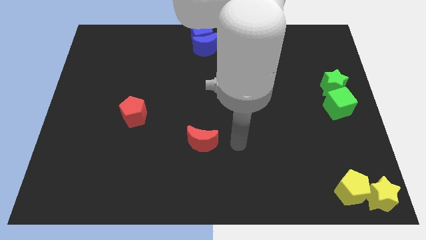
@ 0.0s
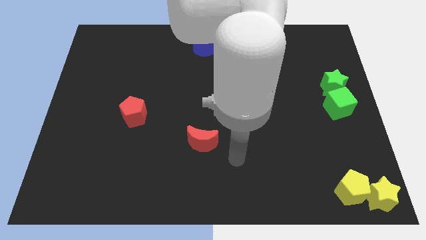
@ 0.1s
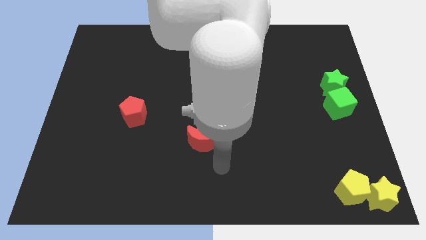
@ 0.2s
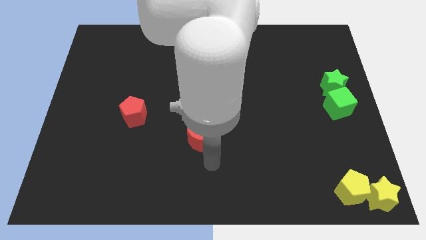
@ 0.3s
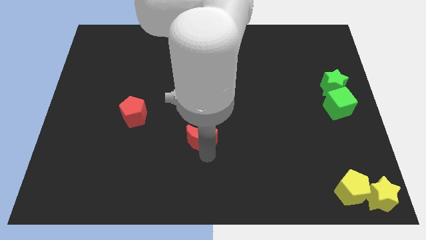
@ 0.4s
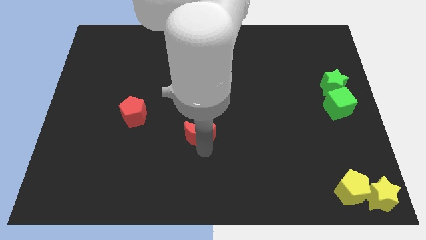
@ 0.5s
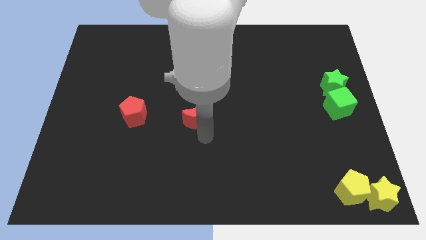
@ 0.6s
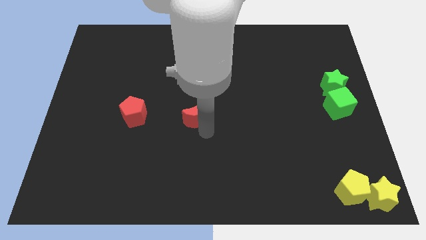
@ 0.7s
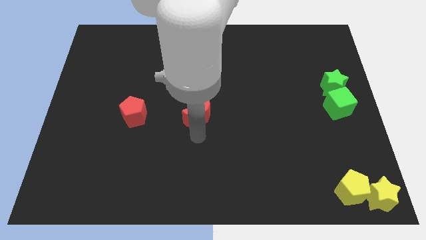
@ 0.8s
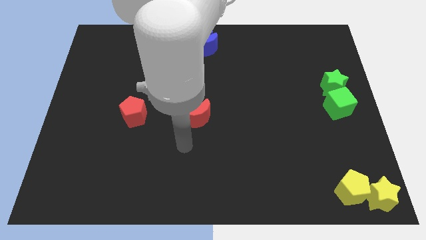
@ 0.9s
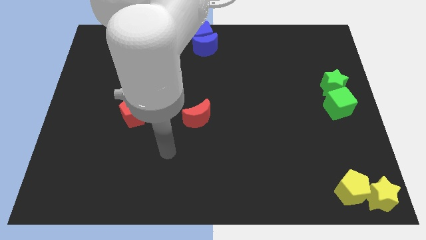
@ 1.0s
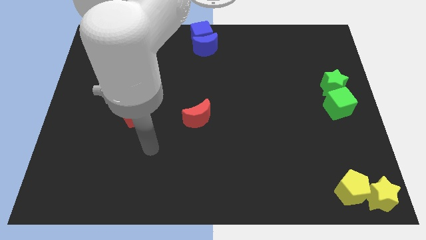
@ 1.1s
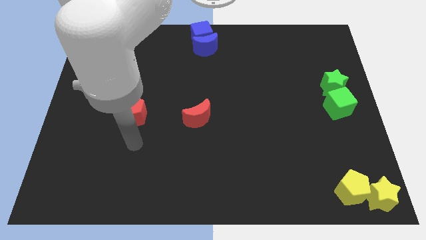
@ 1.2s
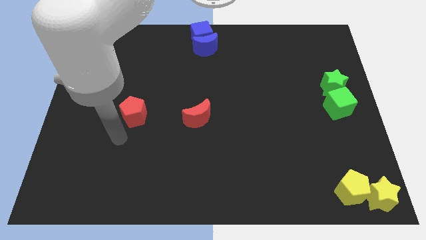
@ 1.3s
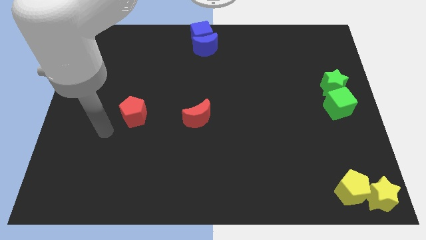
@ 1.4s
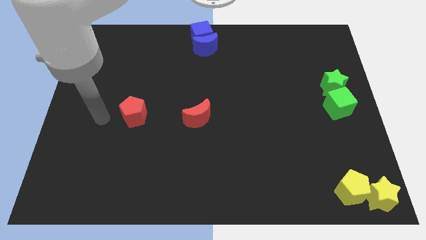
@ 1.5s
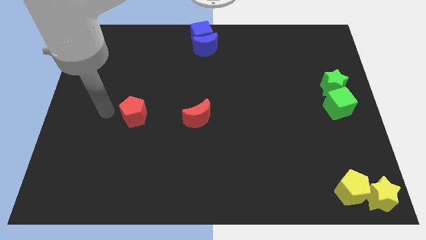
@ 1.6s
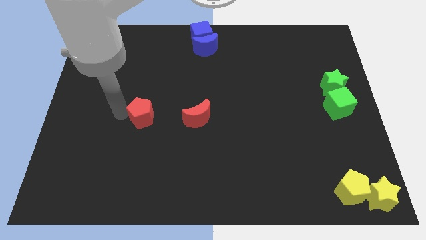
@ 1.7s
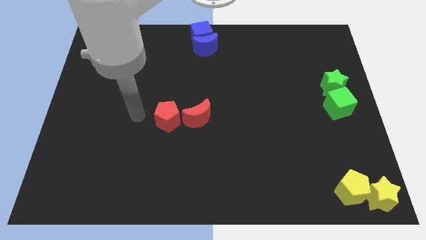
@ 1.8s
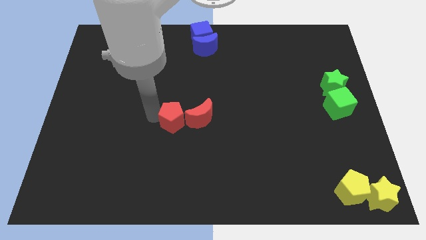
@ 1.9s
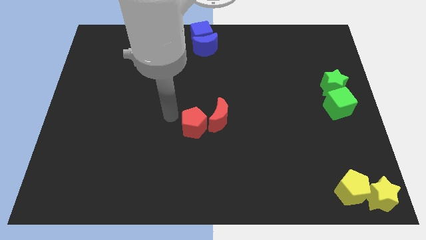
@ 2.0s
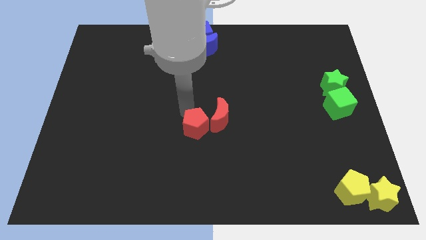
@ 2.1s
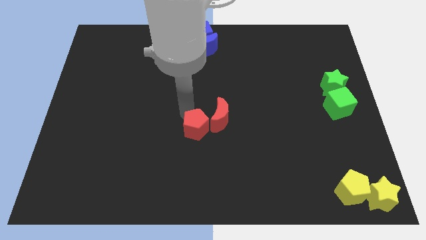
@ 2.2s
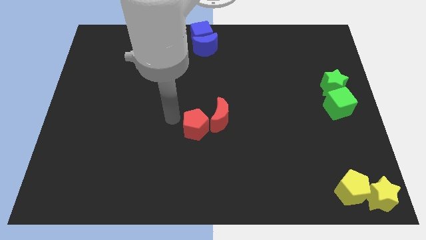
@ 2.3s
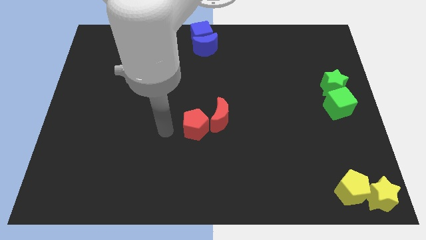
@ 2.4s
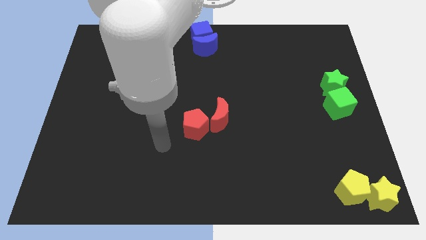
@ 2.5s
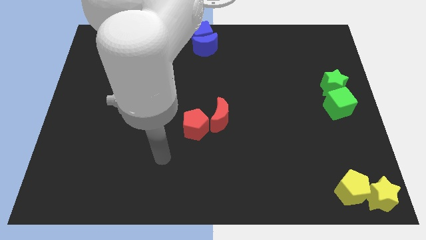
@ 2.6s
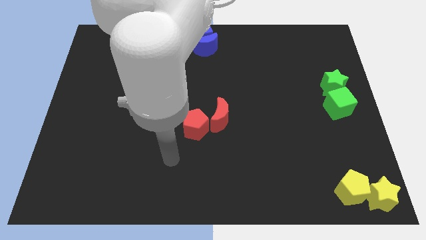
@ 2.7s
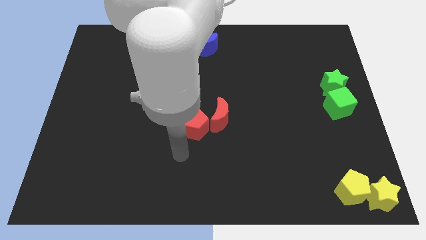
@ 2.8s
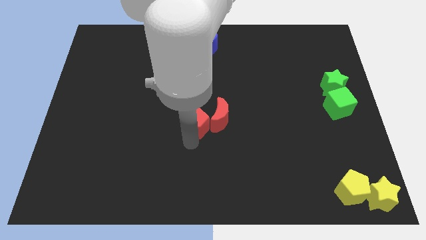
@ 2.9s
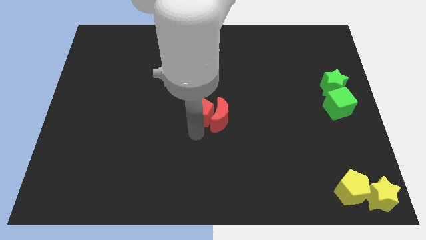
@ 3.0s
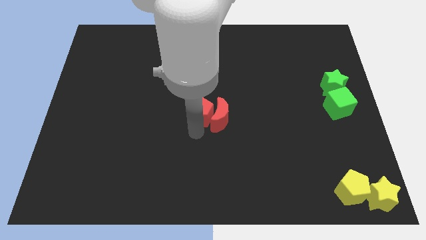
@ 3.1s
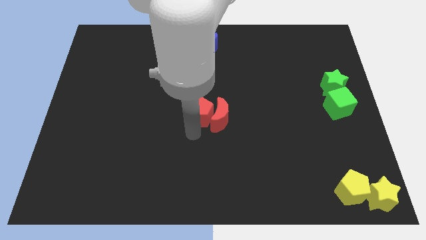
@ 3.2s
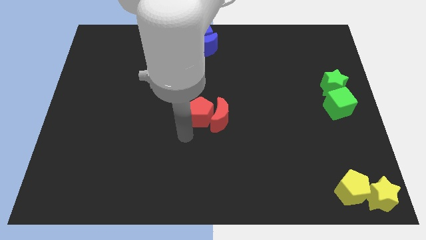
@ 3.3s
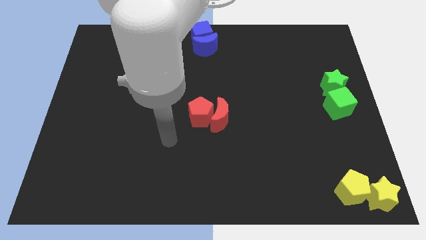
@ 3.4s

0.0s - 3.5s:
place the red blocks to the center of the board

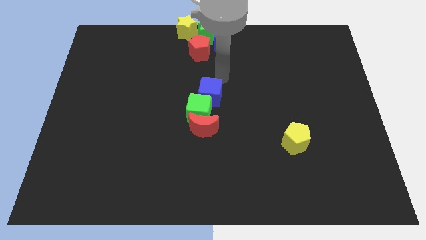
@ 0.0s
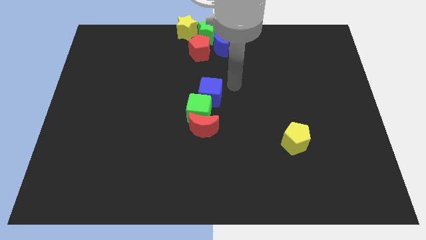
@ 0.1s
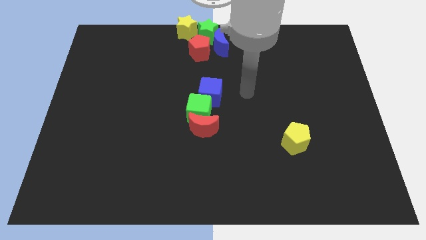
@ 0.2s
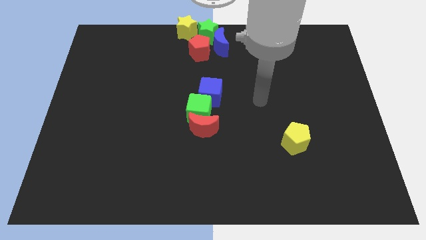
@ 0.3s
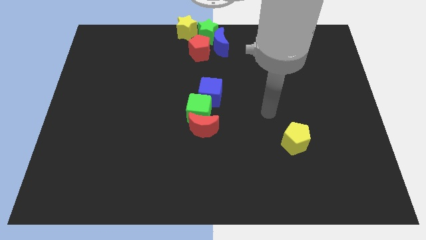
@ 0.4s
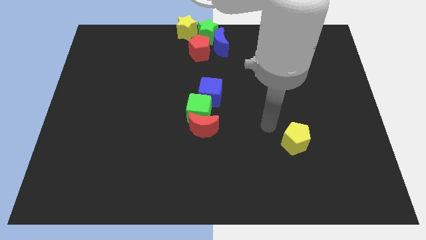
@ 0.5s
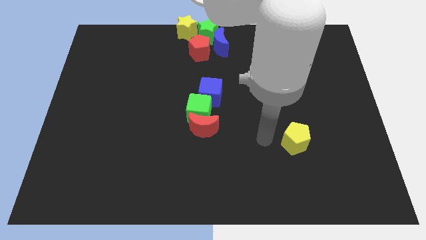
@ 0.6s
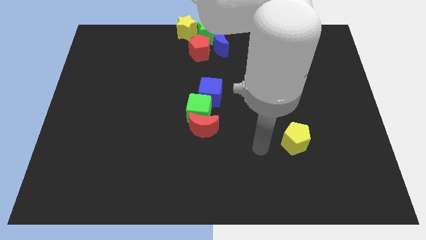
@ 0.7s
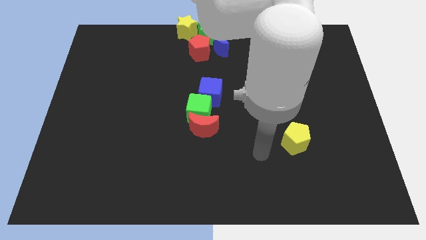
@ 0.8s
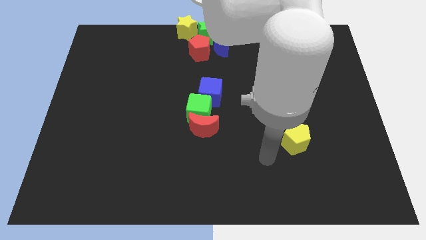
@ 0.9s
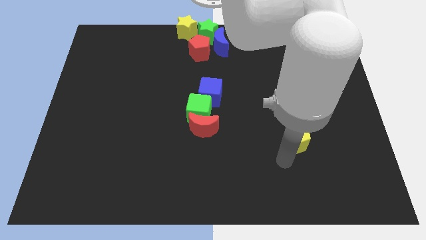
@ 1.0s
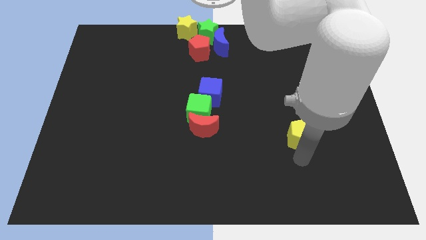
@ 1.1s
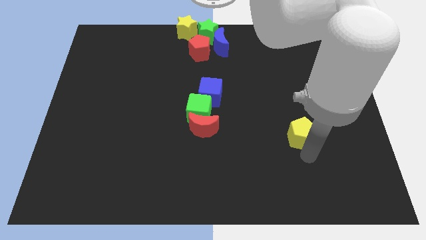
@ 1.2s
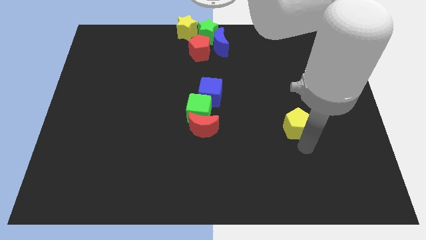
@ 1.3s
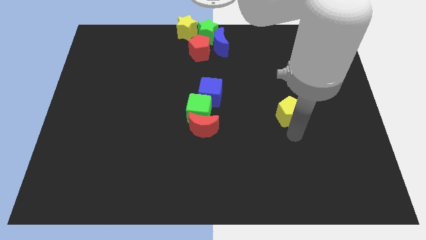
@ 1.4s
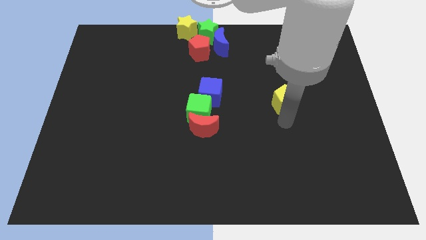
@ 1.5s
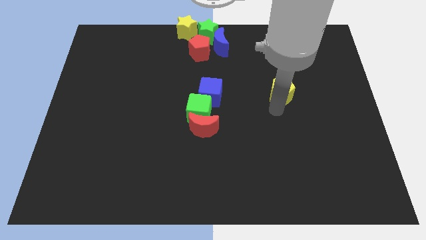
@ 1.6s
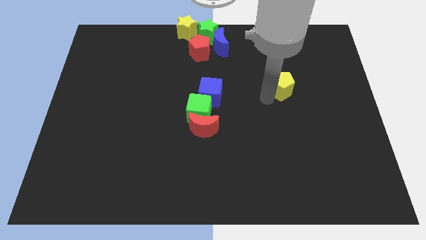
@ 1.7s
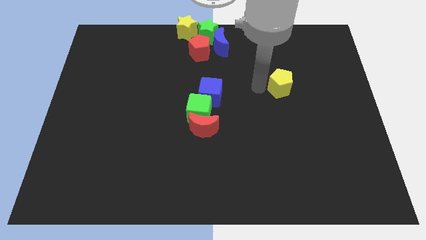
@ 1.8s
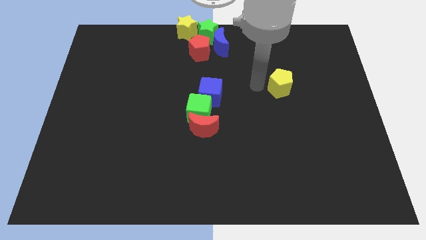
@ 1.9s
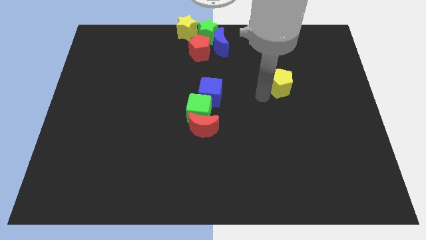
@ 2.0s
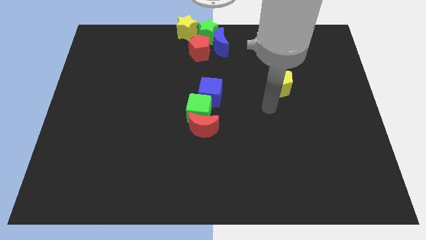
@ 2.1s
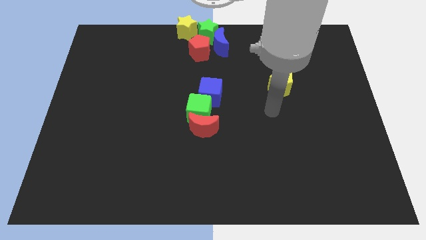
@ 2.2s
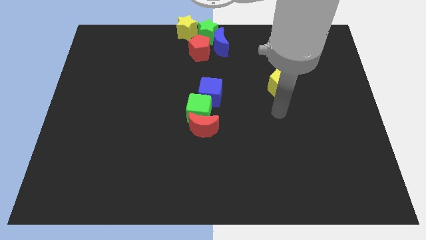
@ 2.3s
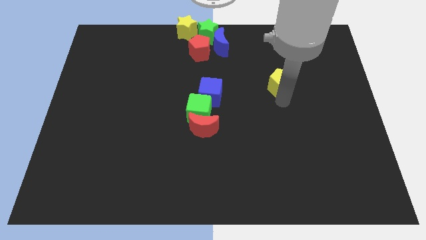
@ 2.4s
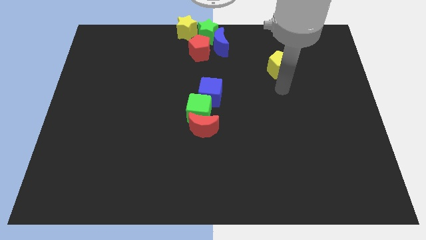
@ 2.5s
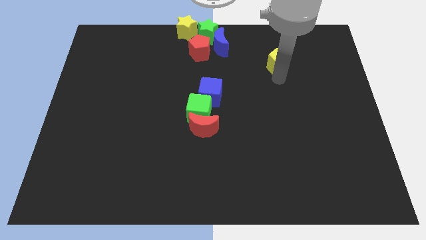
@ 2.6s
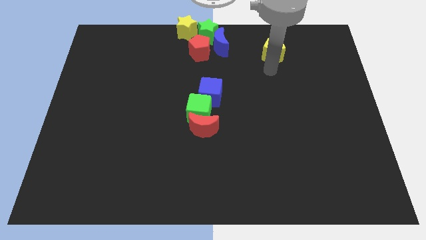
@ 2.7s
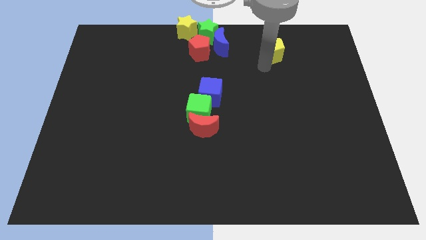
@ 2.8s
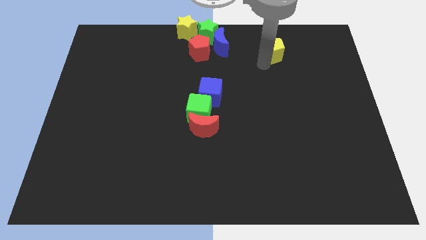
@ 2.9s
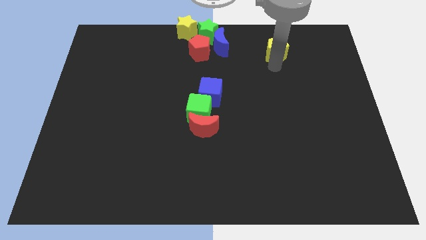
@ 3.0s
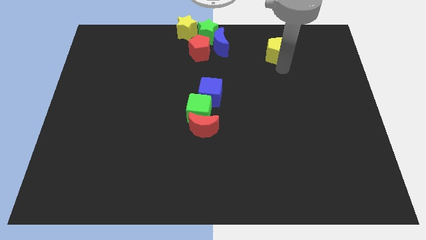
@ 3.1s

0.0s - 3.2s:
place the yellow pentagon diagonally top right to the blue cube

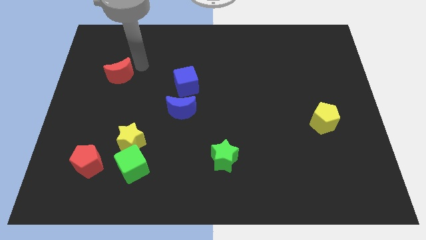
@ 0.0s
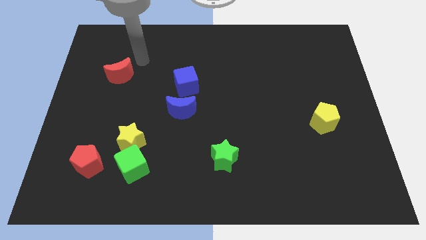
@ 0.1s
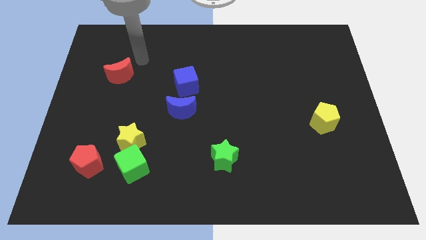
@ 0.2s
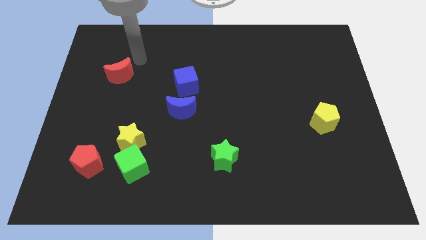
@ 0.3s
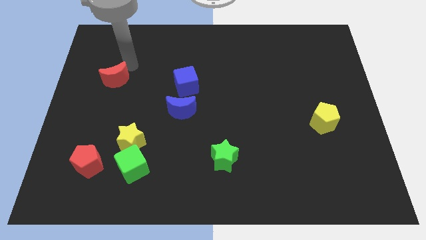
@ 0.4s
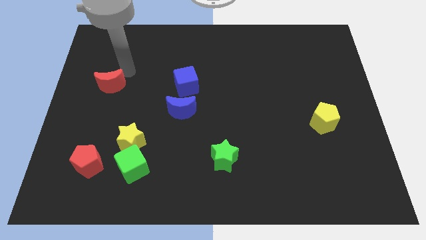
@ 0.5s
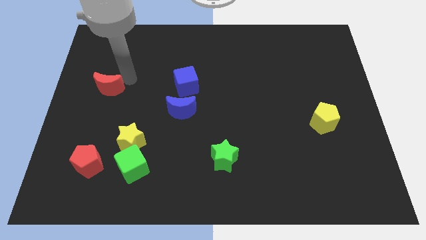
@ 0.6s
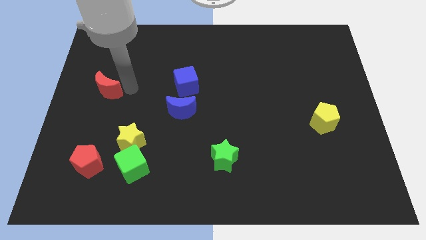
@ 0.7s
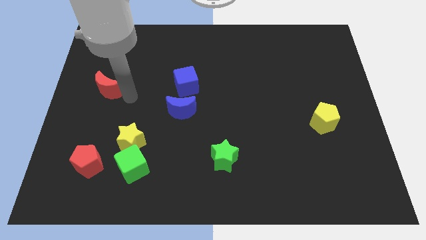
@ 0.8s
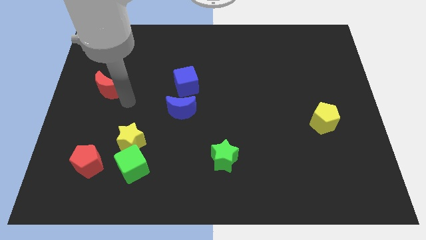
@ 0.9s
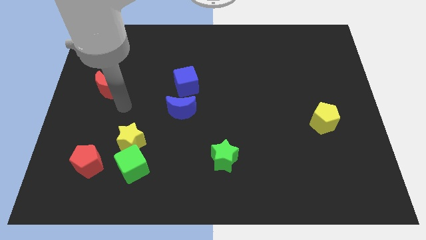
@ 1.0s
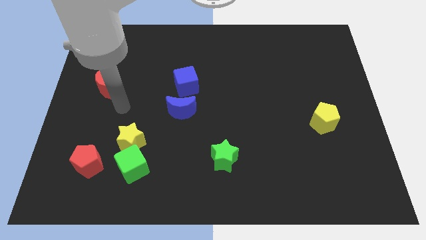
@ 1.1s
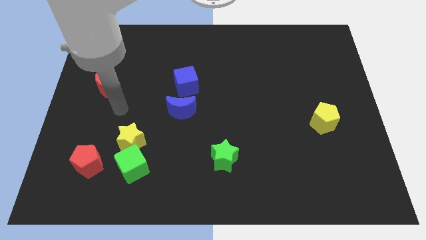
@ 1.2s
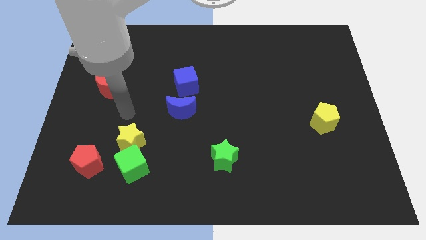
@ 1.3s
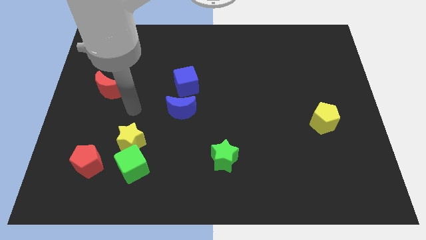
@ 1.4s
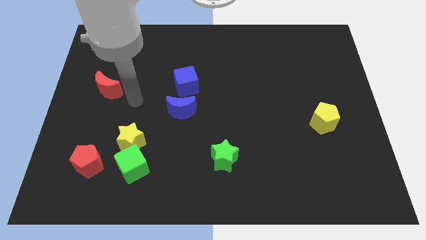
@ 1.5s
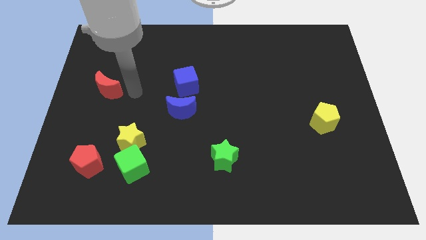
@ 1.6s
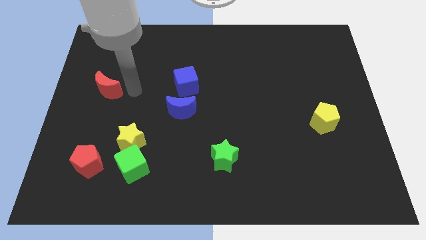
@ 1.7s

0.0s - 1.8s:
slide the red moon vertically above the red pentagon

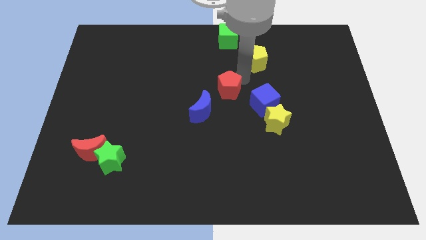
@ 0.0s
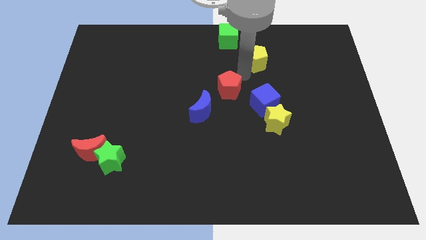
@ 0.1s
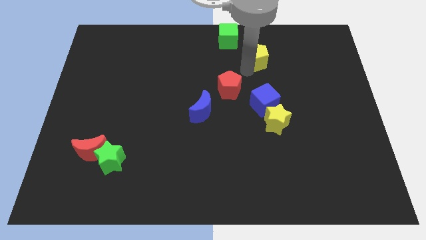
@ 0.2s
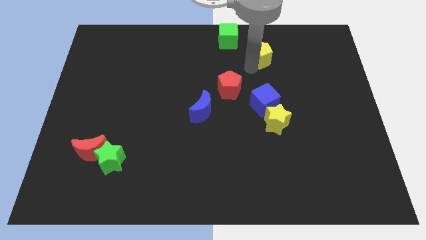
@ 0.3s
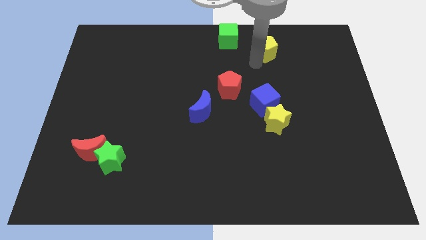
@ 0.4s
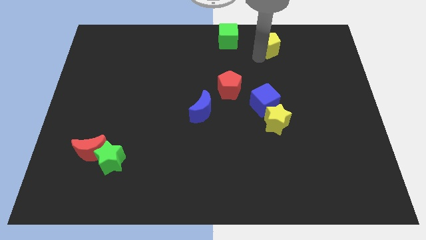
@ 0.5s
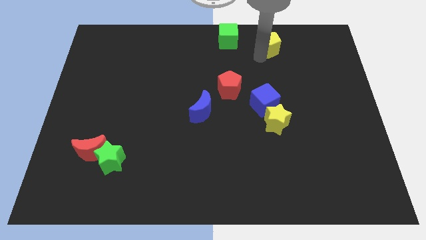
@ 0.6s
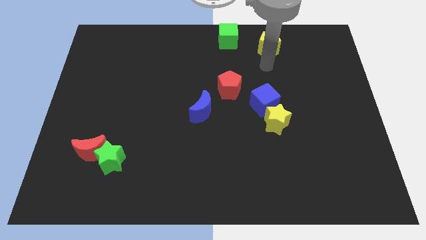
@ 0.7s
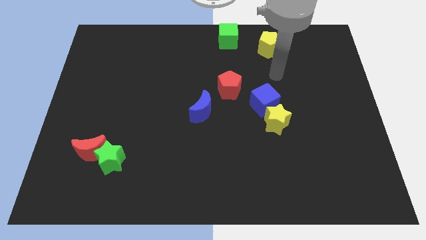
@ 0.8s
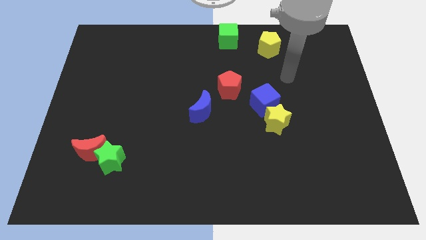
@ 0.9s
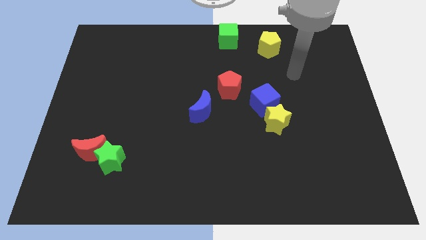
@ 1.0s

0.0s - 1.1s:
move the yellow pentagon diagonally top right to the red pentagon
